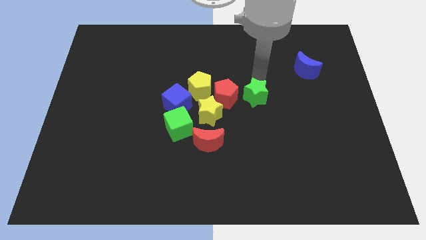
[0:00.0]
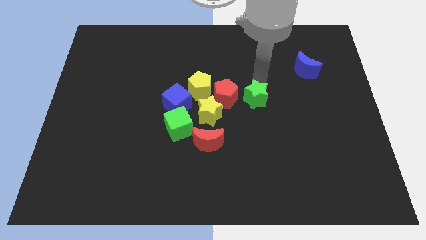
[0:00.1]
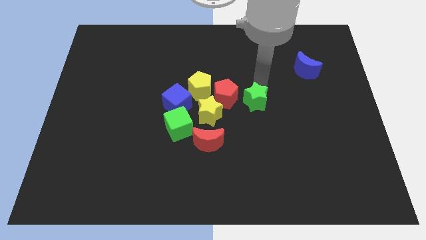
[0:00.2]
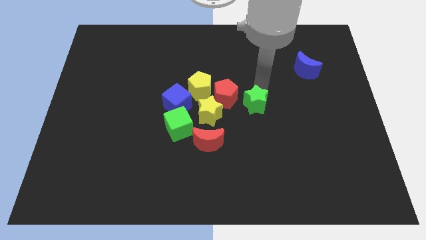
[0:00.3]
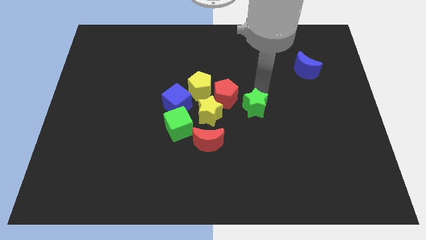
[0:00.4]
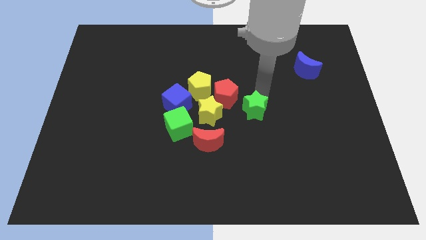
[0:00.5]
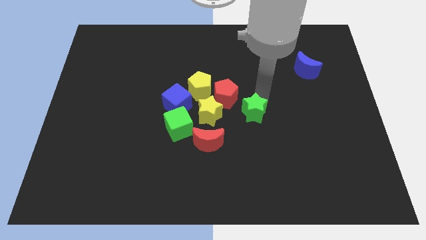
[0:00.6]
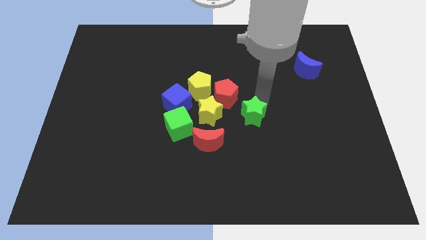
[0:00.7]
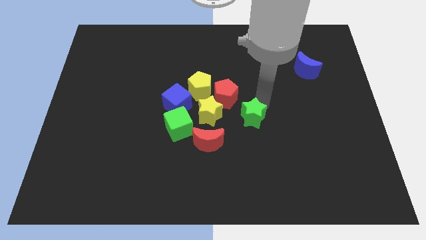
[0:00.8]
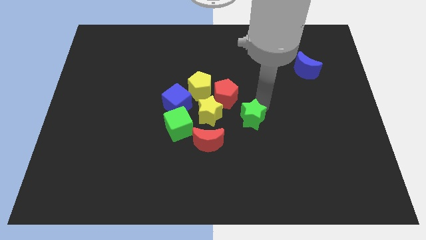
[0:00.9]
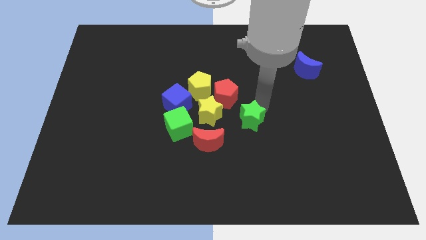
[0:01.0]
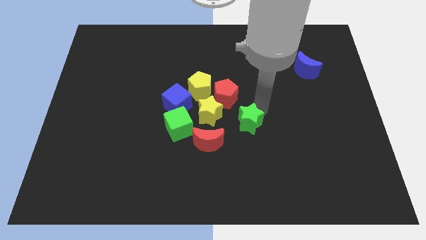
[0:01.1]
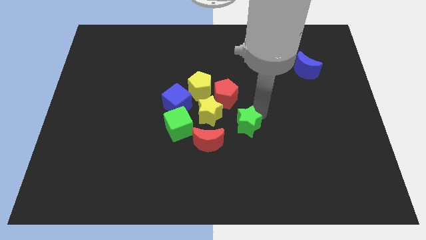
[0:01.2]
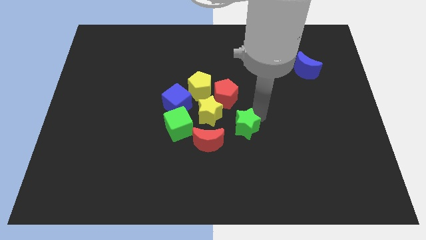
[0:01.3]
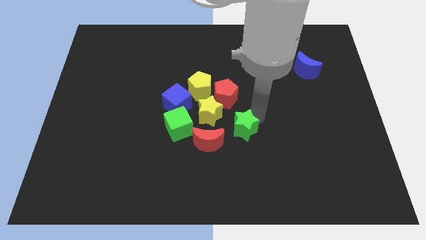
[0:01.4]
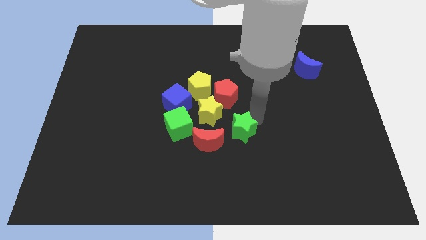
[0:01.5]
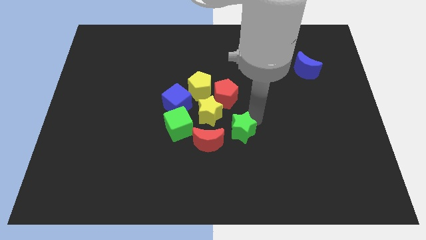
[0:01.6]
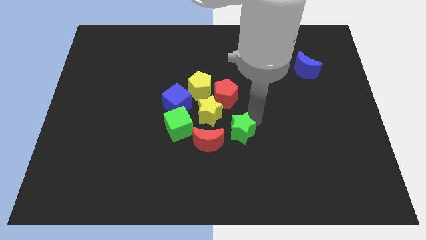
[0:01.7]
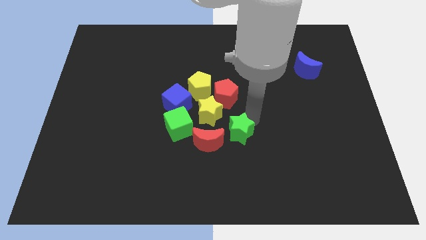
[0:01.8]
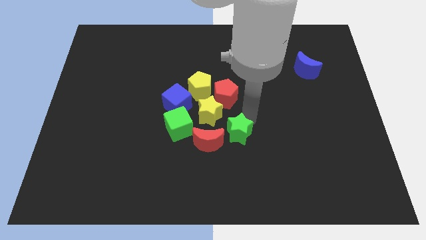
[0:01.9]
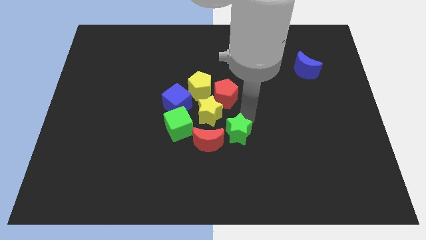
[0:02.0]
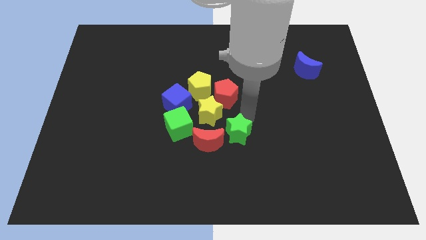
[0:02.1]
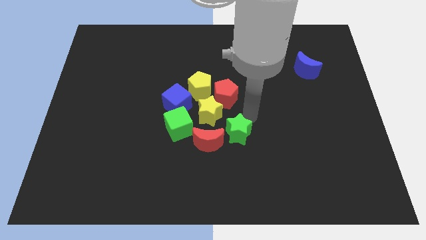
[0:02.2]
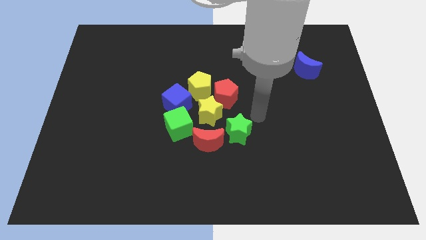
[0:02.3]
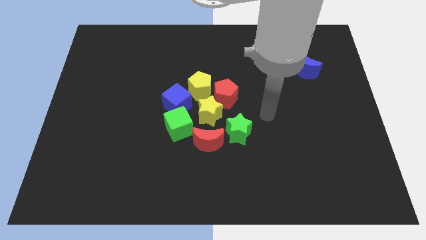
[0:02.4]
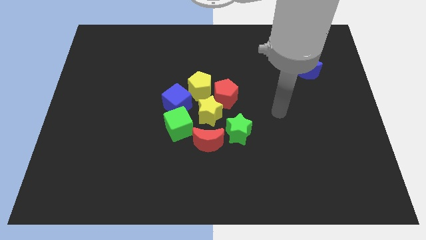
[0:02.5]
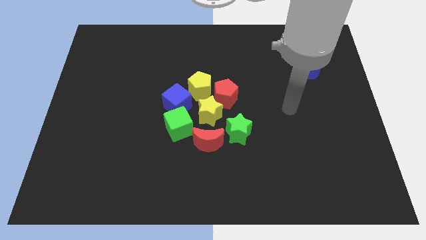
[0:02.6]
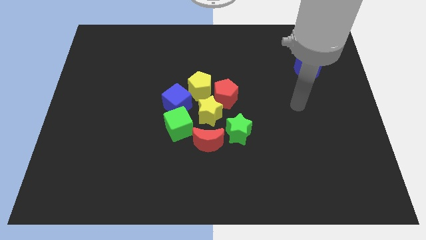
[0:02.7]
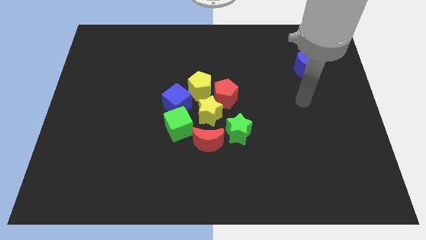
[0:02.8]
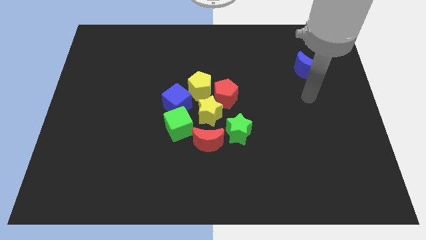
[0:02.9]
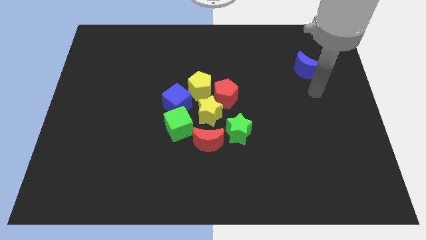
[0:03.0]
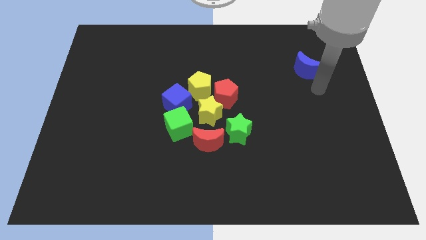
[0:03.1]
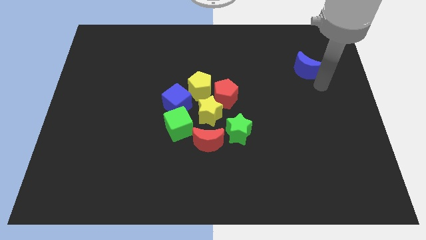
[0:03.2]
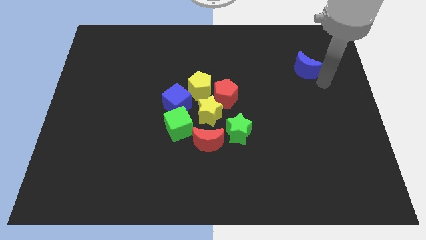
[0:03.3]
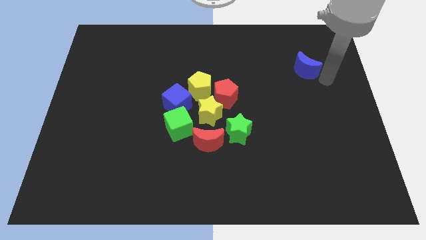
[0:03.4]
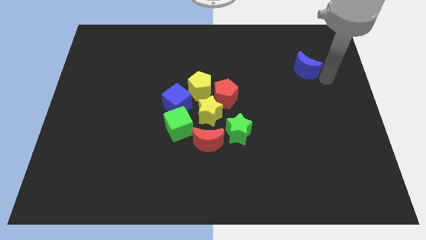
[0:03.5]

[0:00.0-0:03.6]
move the green star to the right side of the red crescent

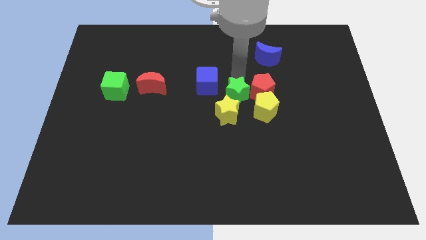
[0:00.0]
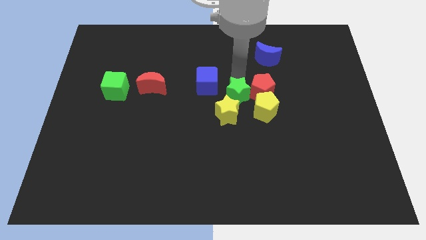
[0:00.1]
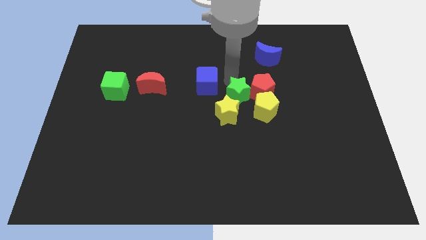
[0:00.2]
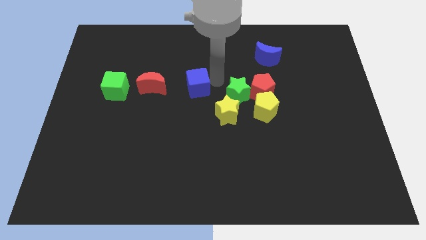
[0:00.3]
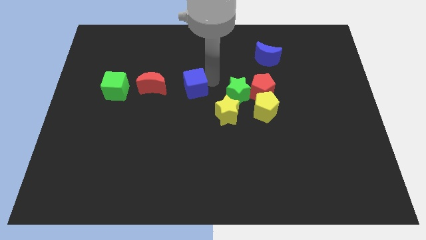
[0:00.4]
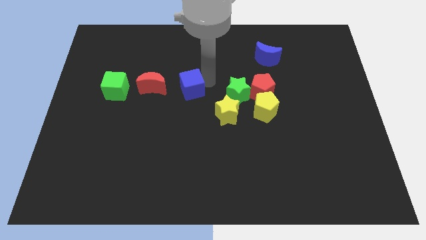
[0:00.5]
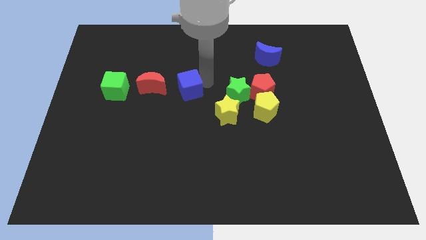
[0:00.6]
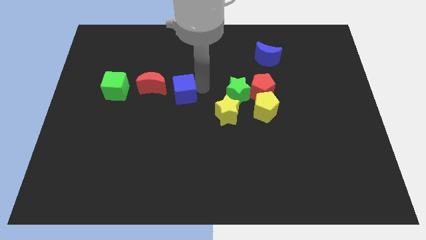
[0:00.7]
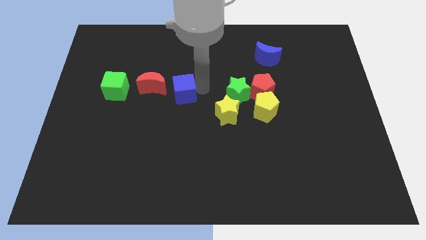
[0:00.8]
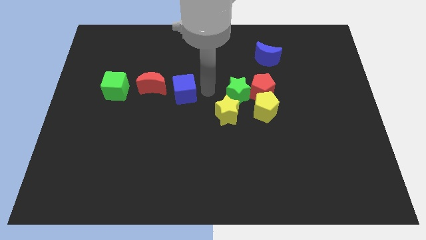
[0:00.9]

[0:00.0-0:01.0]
separate blue cube from green star

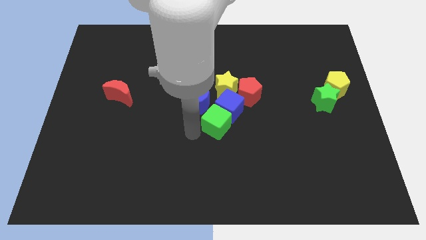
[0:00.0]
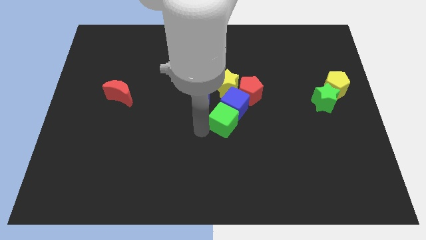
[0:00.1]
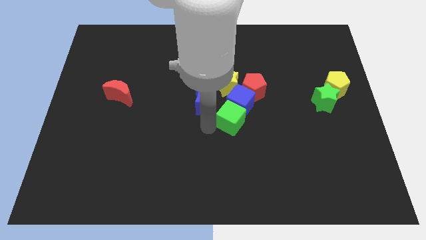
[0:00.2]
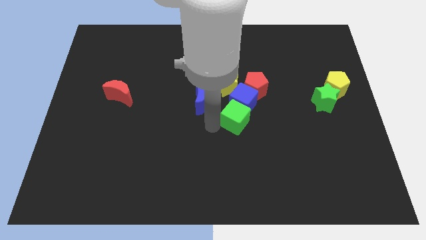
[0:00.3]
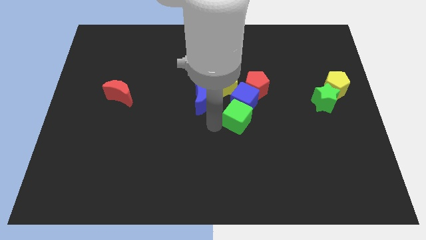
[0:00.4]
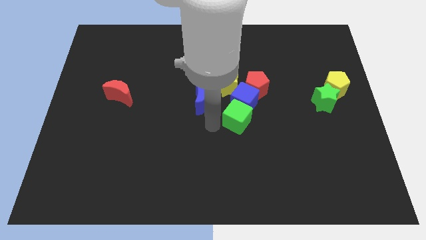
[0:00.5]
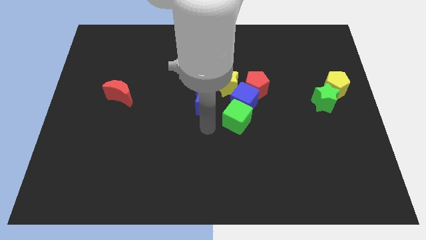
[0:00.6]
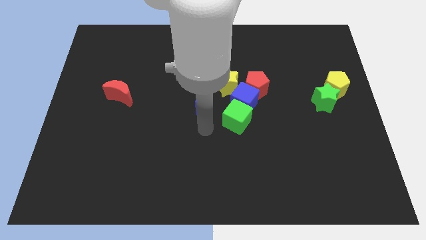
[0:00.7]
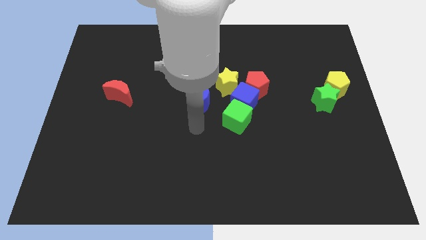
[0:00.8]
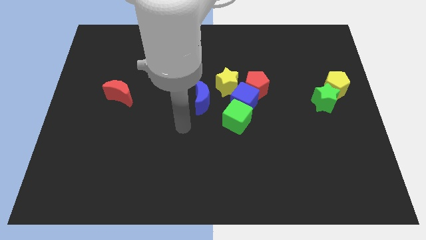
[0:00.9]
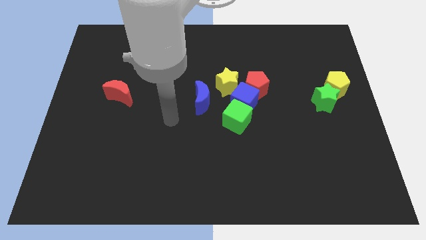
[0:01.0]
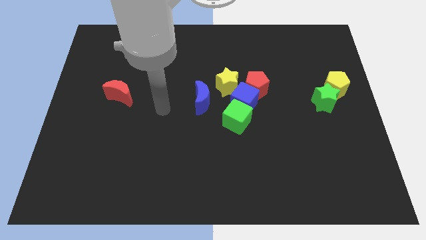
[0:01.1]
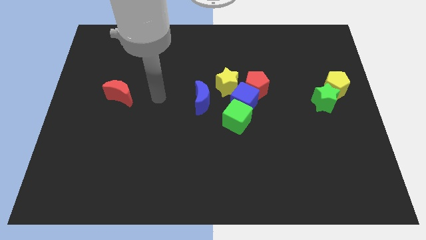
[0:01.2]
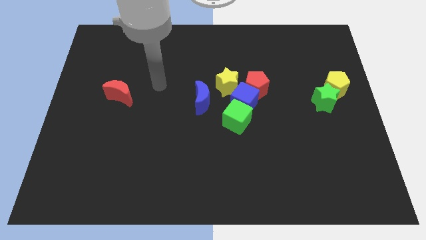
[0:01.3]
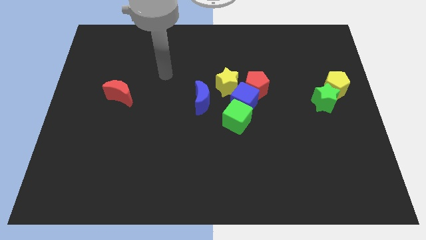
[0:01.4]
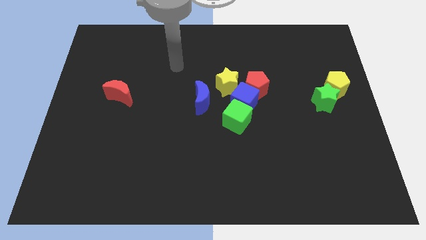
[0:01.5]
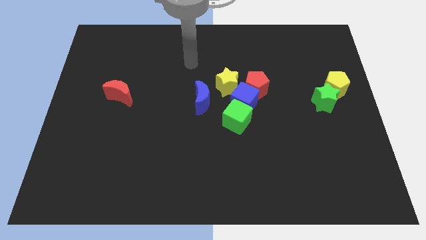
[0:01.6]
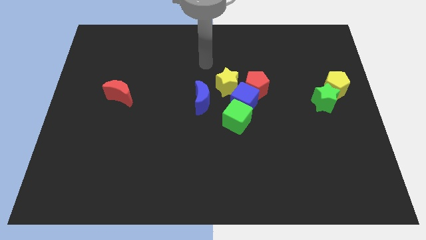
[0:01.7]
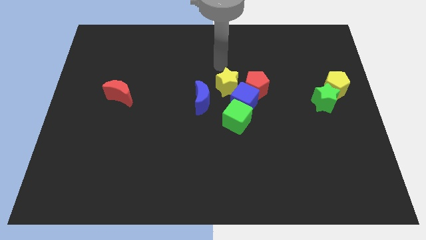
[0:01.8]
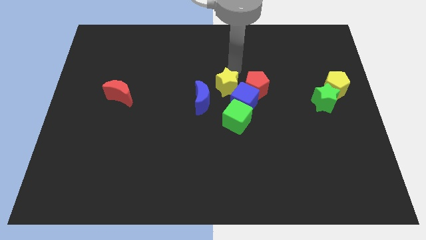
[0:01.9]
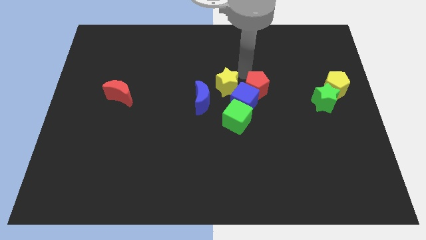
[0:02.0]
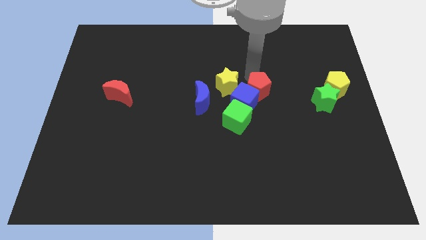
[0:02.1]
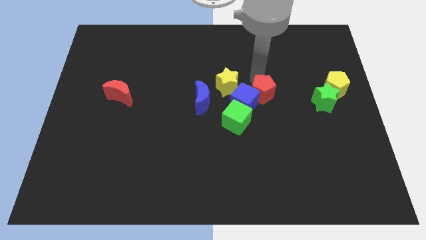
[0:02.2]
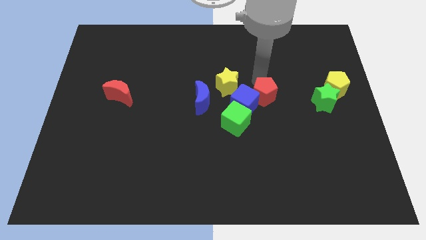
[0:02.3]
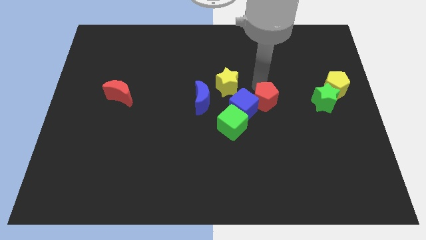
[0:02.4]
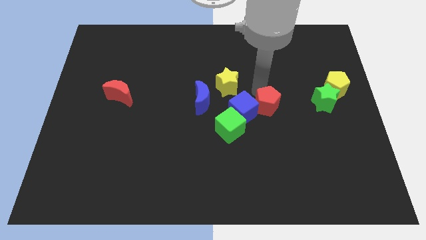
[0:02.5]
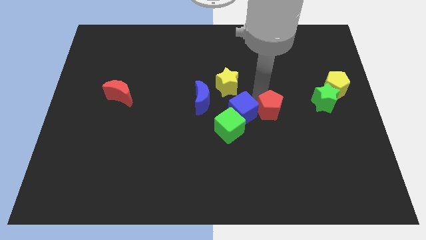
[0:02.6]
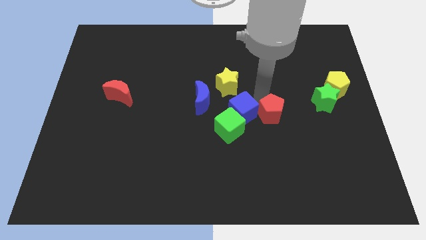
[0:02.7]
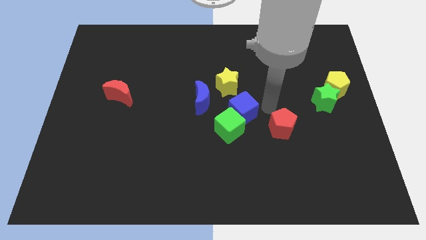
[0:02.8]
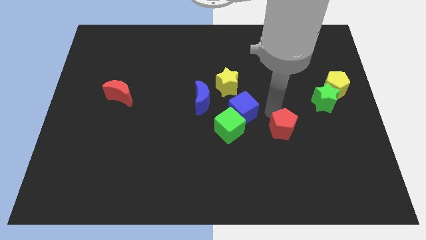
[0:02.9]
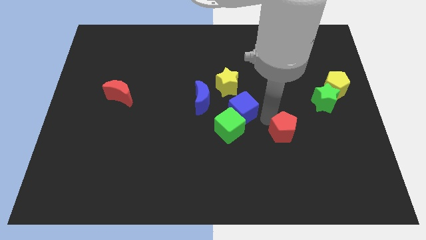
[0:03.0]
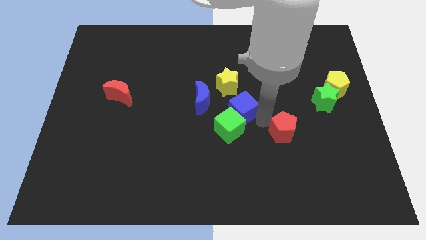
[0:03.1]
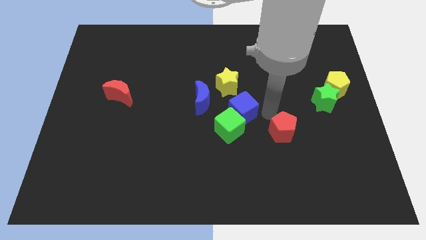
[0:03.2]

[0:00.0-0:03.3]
separate red pentagon from blue cube

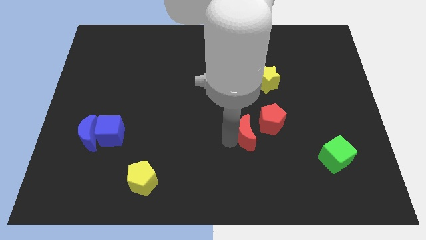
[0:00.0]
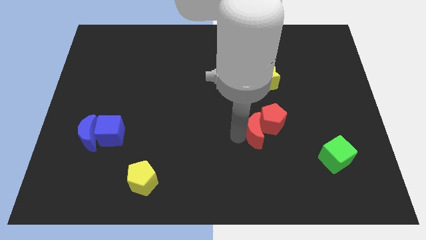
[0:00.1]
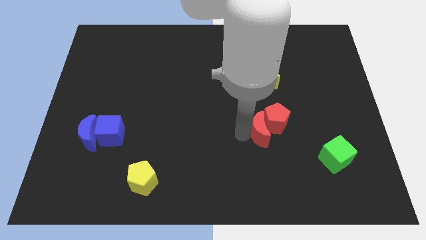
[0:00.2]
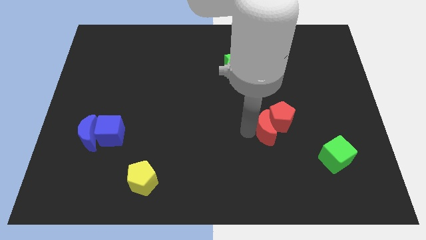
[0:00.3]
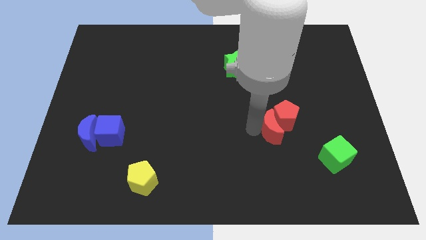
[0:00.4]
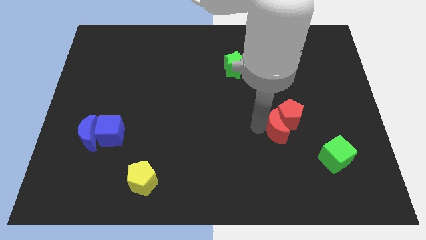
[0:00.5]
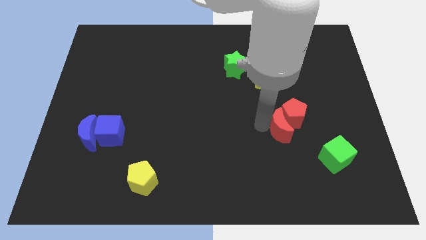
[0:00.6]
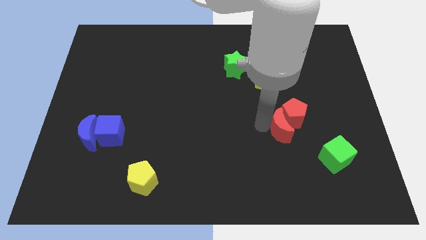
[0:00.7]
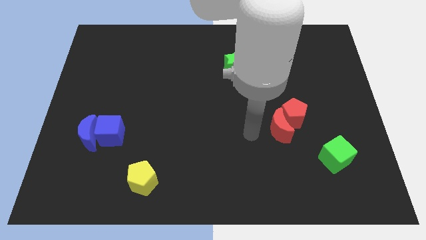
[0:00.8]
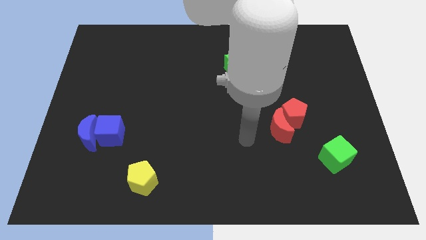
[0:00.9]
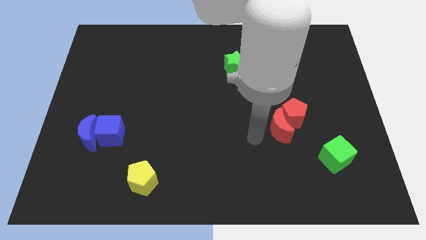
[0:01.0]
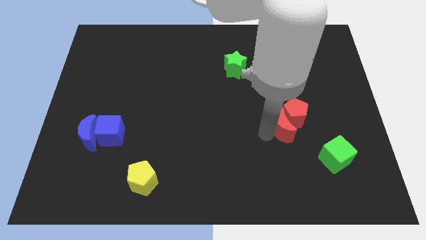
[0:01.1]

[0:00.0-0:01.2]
push the red moon into the red pentagon
